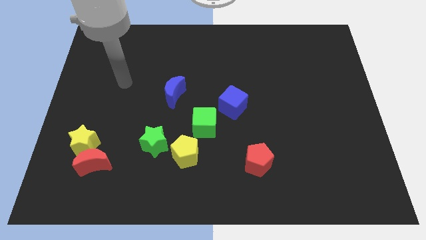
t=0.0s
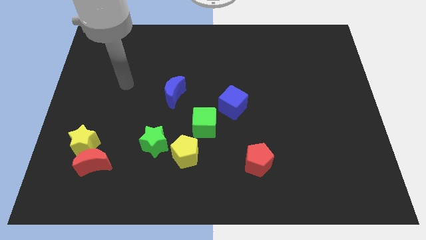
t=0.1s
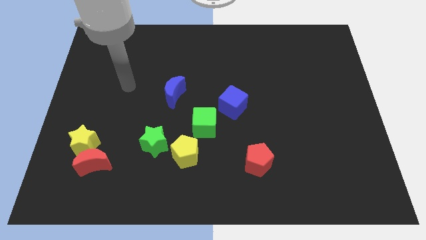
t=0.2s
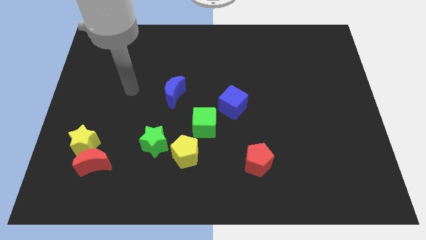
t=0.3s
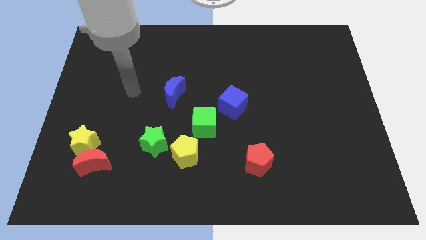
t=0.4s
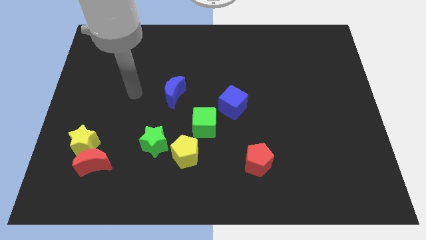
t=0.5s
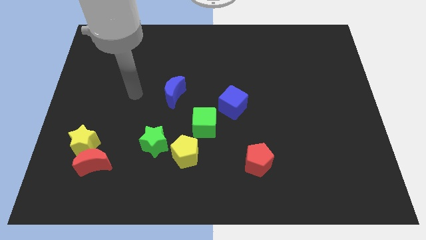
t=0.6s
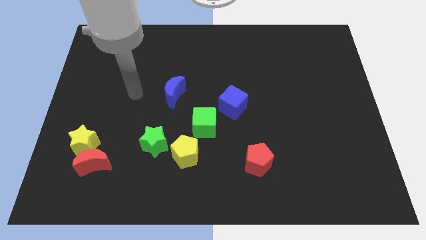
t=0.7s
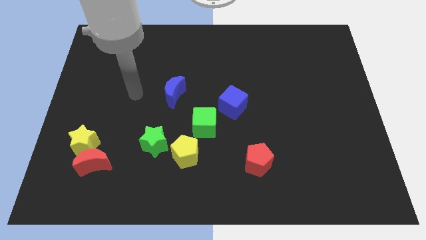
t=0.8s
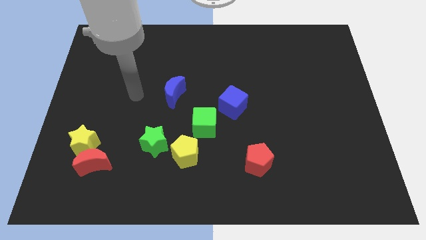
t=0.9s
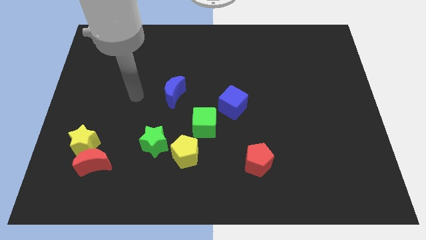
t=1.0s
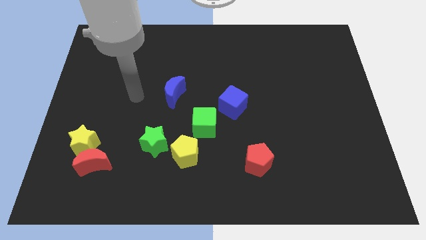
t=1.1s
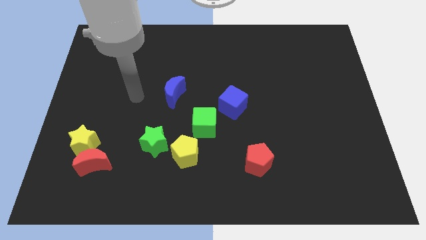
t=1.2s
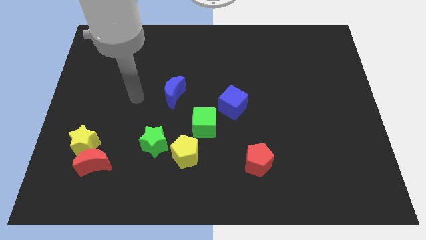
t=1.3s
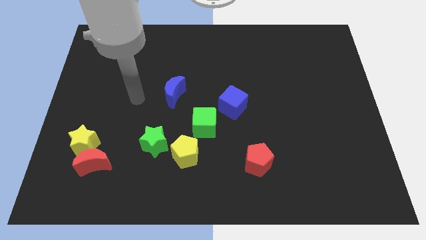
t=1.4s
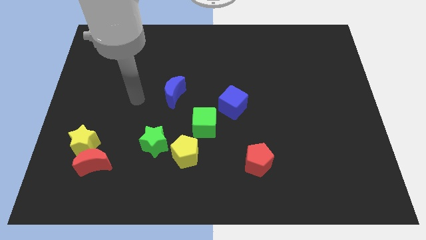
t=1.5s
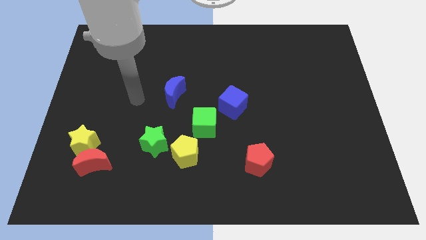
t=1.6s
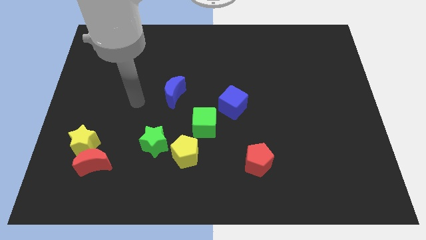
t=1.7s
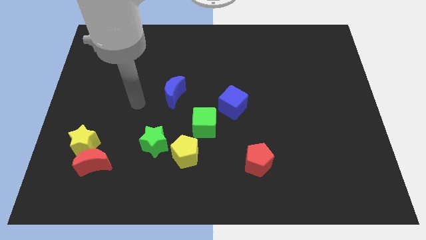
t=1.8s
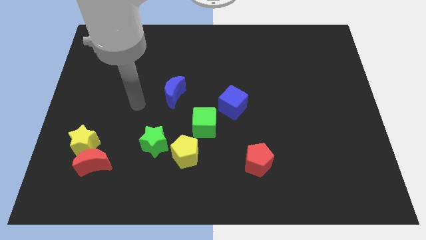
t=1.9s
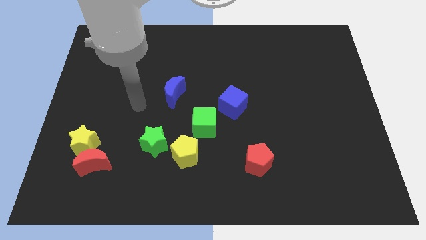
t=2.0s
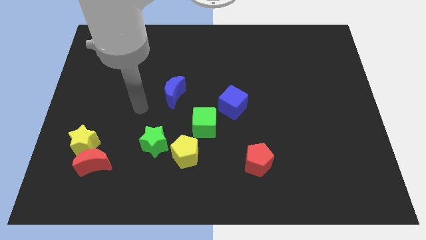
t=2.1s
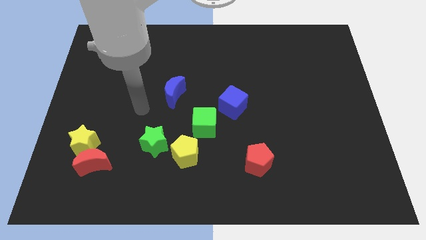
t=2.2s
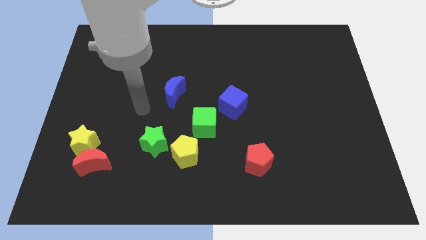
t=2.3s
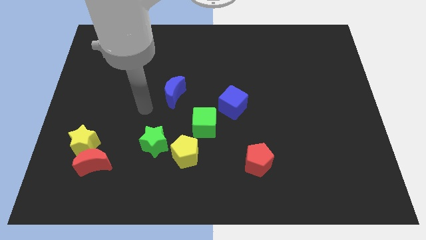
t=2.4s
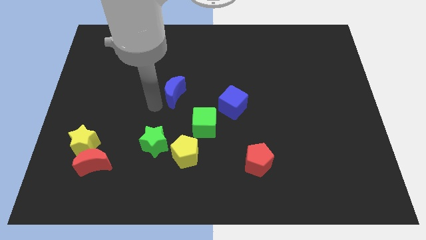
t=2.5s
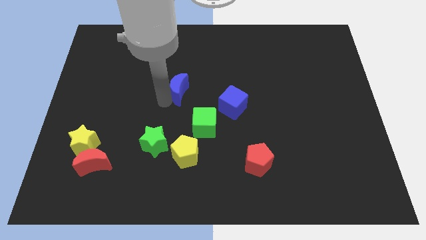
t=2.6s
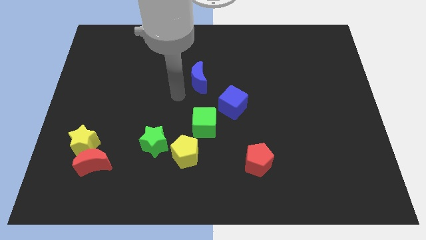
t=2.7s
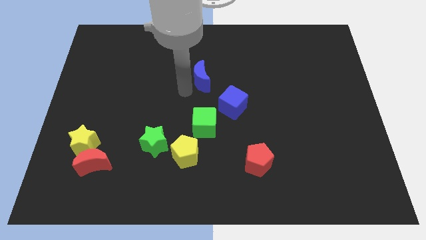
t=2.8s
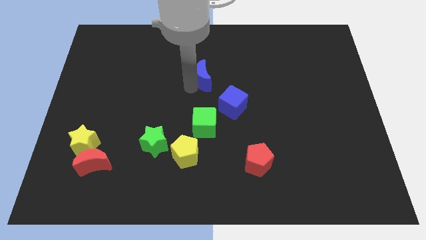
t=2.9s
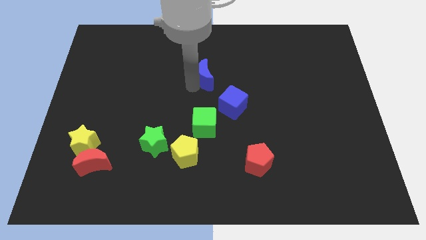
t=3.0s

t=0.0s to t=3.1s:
slide blue moon above the green cube

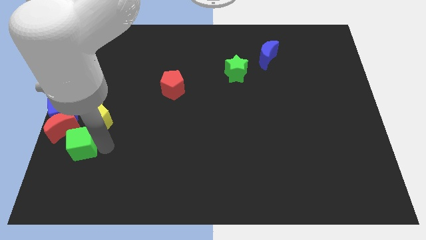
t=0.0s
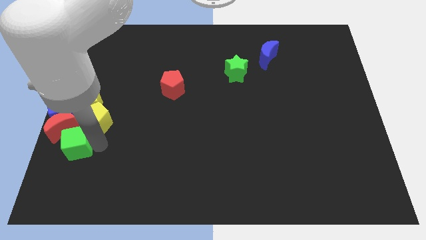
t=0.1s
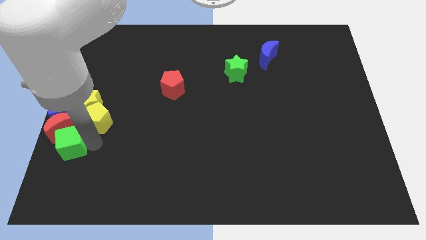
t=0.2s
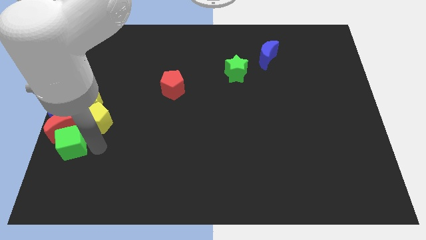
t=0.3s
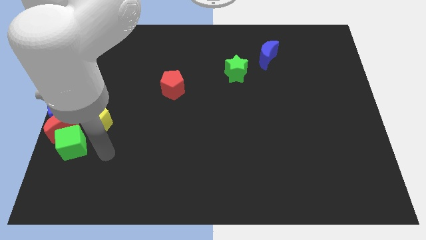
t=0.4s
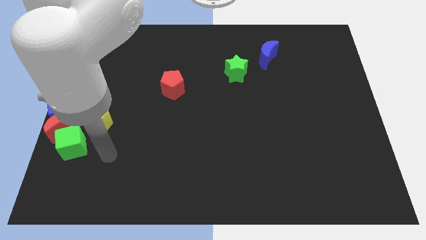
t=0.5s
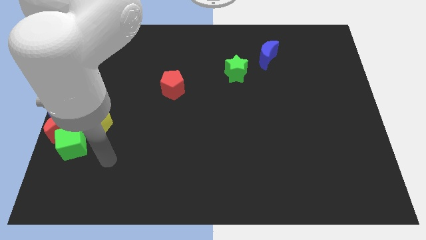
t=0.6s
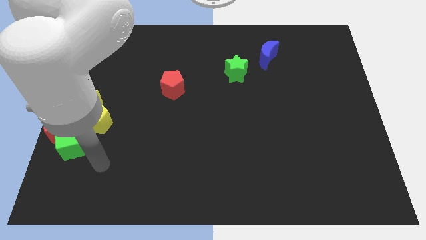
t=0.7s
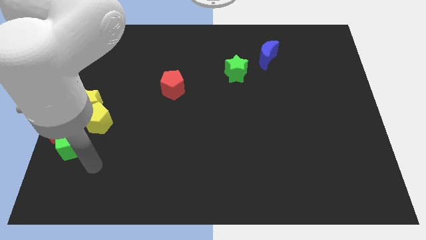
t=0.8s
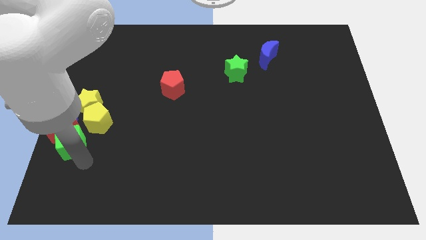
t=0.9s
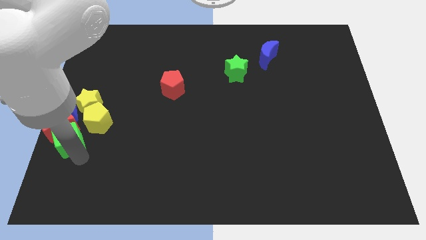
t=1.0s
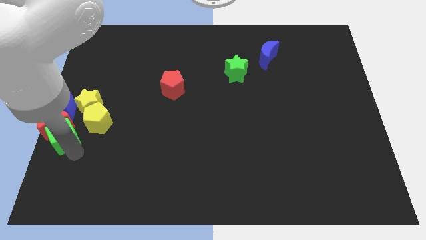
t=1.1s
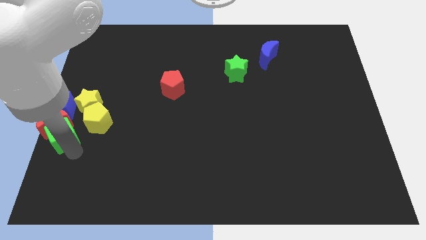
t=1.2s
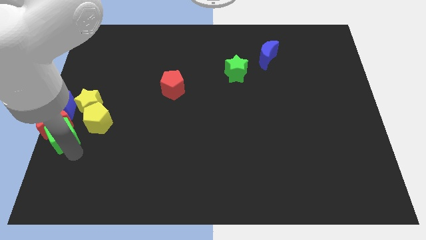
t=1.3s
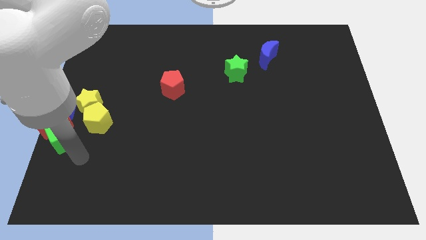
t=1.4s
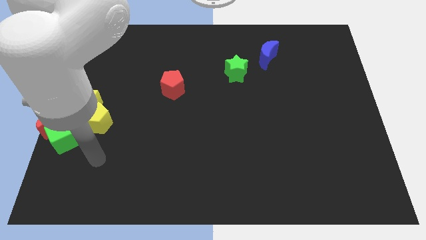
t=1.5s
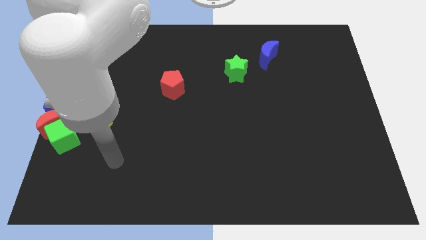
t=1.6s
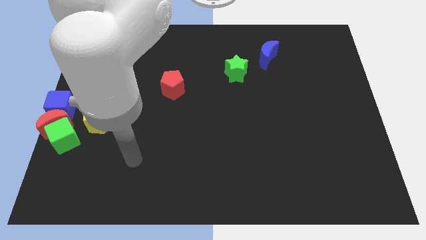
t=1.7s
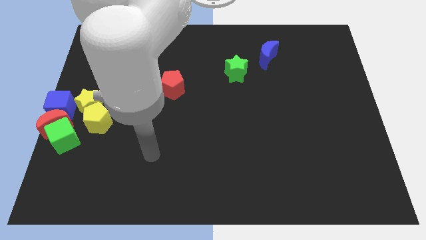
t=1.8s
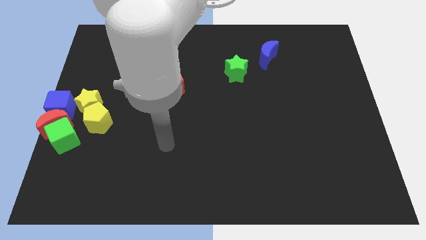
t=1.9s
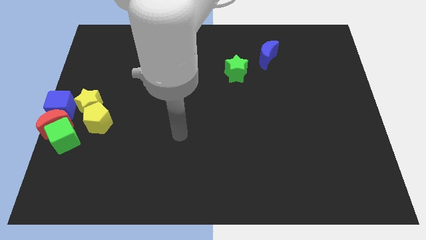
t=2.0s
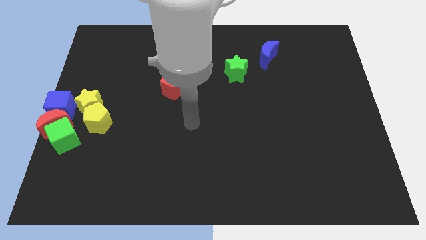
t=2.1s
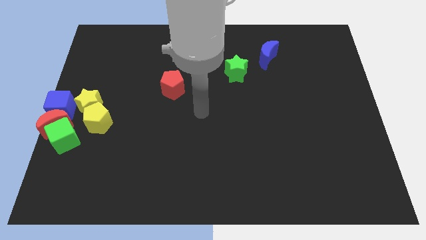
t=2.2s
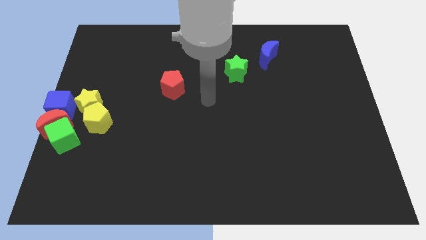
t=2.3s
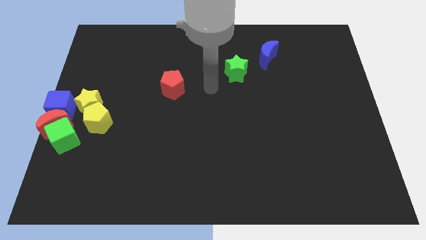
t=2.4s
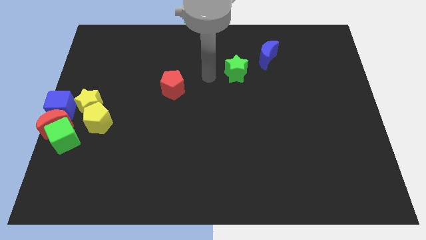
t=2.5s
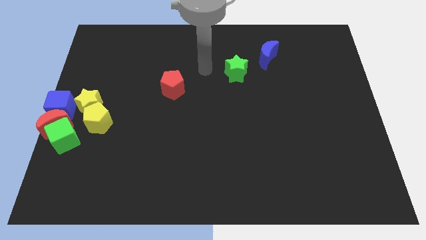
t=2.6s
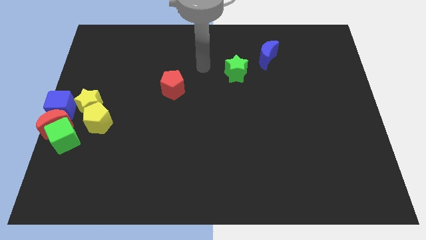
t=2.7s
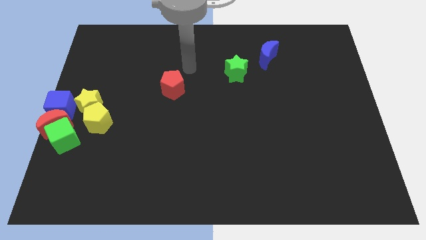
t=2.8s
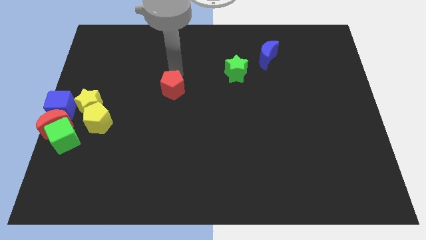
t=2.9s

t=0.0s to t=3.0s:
touch the top of the red pentagon

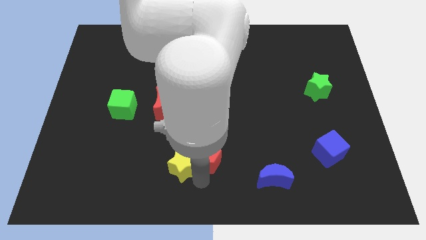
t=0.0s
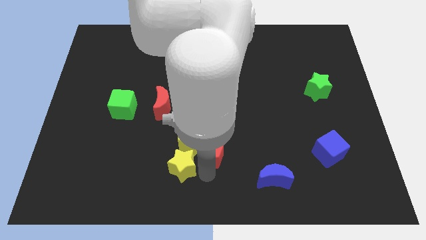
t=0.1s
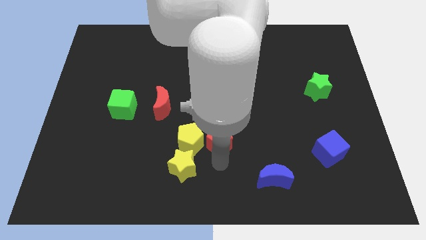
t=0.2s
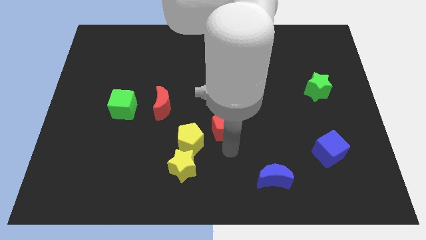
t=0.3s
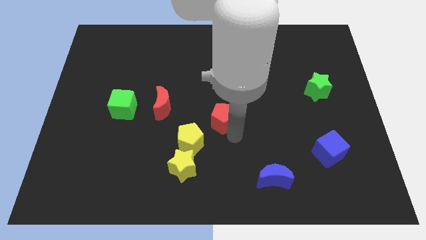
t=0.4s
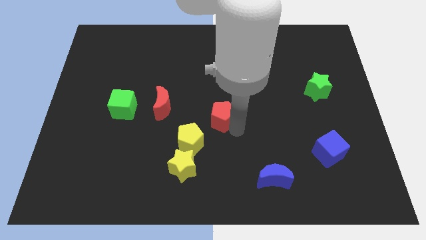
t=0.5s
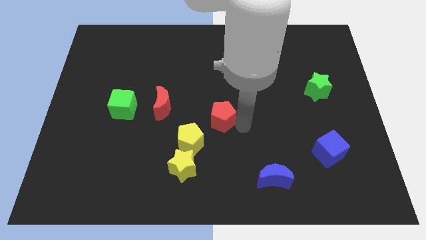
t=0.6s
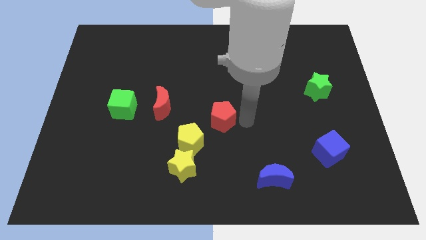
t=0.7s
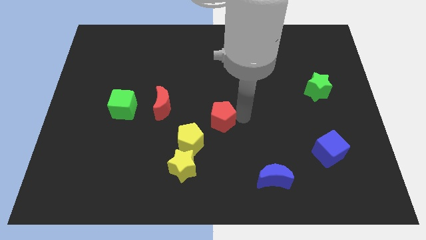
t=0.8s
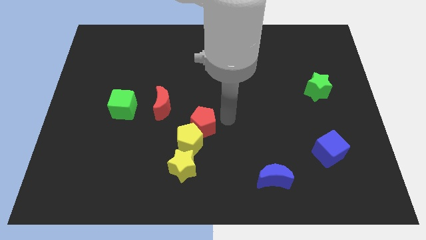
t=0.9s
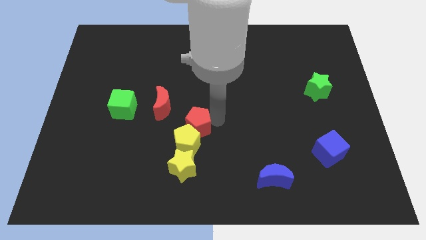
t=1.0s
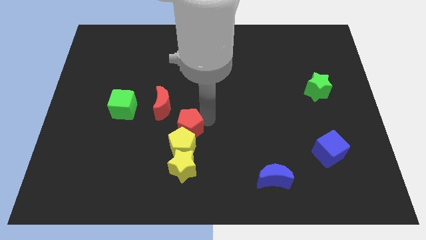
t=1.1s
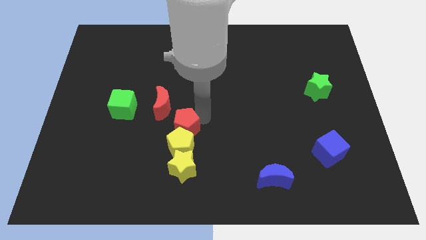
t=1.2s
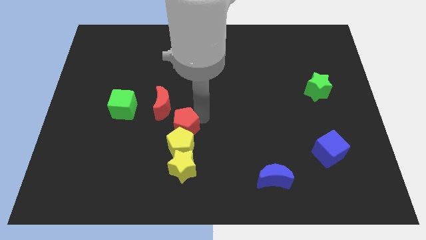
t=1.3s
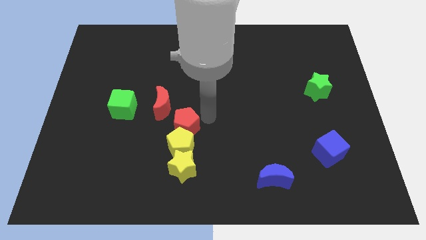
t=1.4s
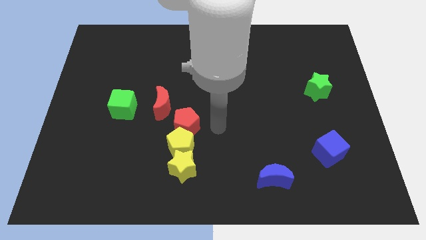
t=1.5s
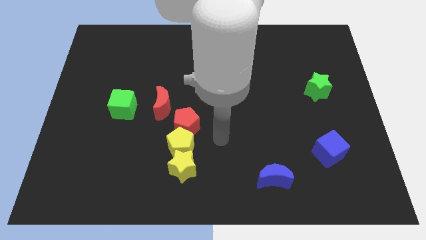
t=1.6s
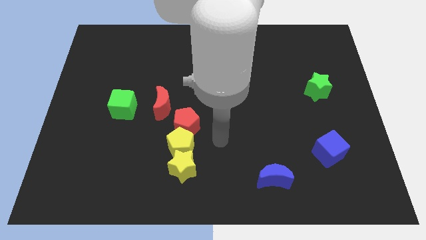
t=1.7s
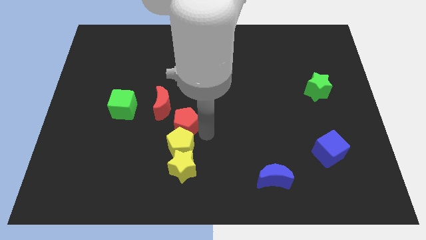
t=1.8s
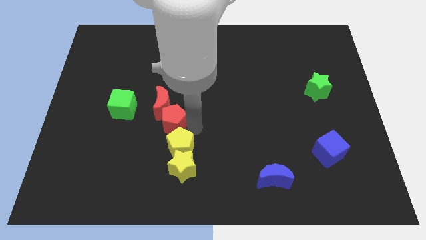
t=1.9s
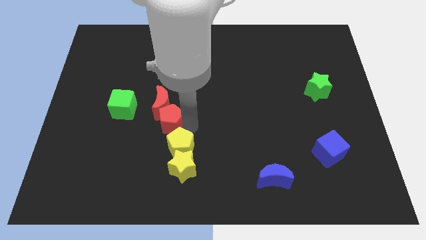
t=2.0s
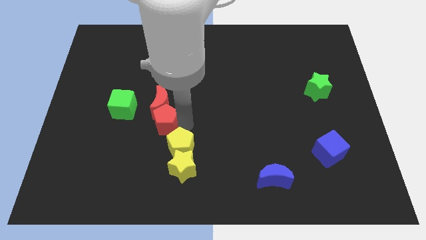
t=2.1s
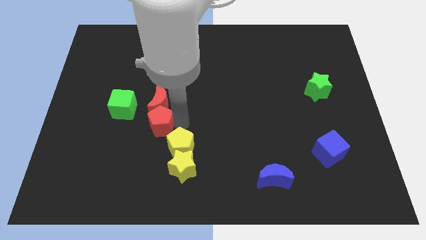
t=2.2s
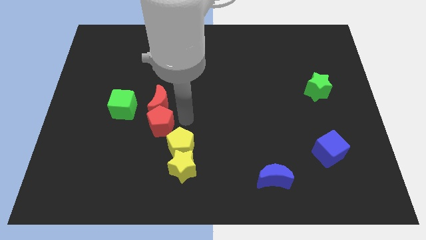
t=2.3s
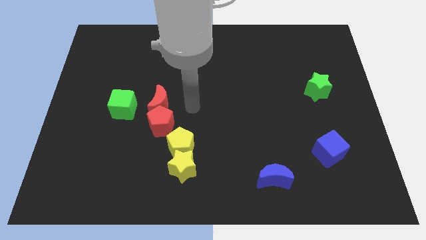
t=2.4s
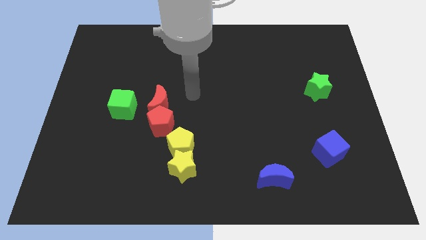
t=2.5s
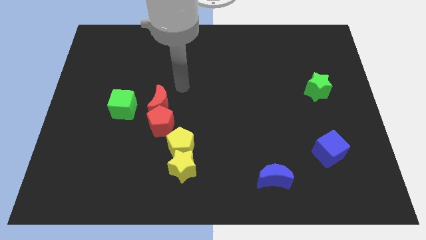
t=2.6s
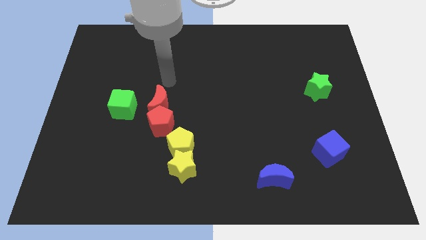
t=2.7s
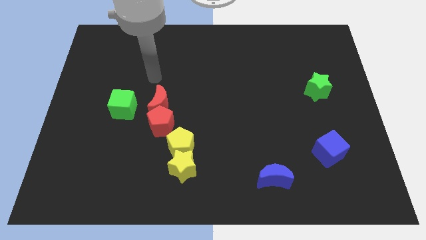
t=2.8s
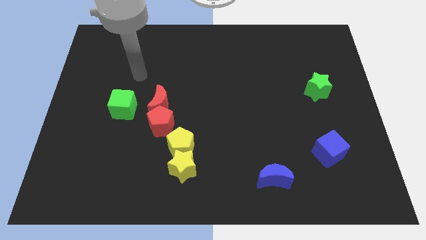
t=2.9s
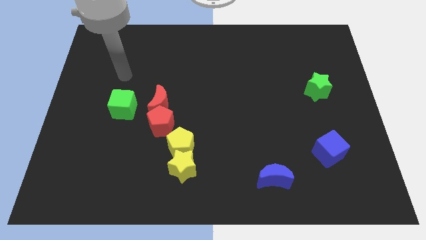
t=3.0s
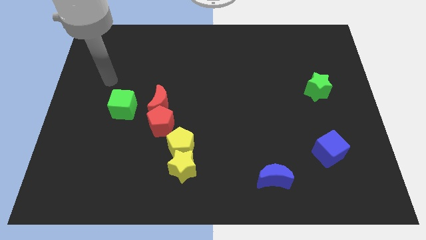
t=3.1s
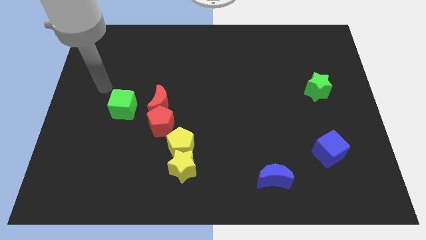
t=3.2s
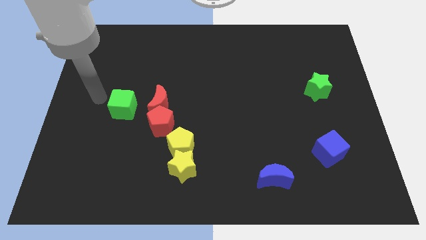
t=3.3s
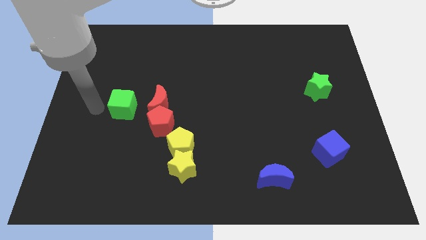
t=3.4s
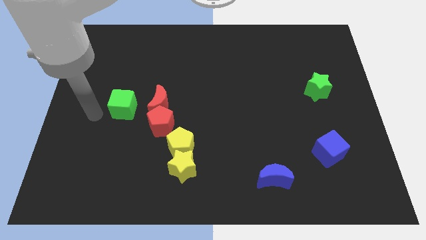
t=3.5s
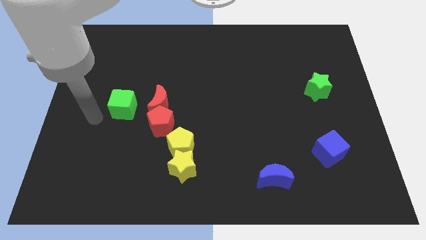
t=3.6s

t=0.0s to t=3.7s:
move the red pentagon towards the bottom of the red crescent
